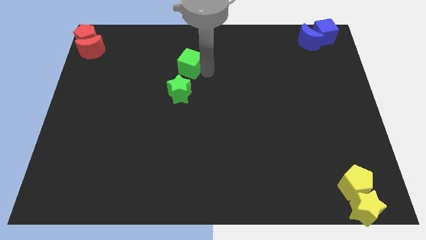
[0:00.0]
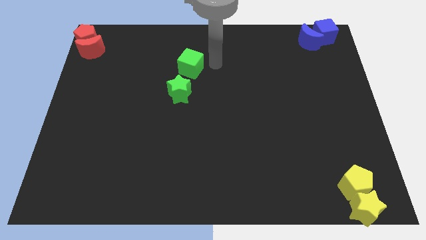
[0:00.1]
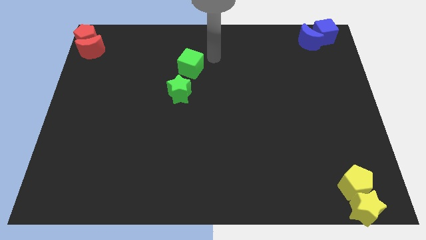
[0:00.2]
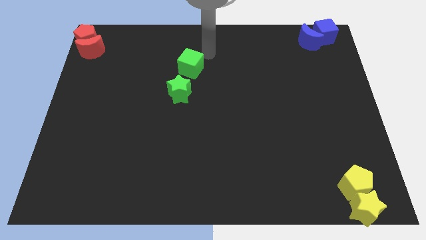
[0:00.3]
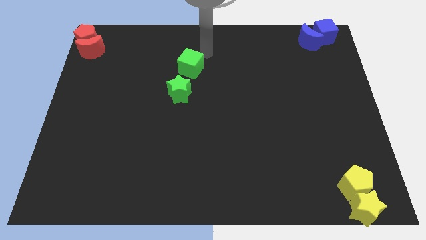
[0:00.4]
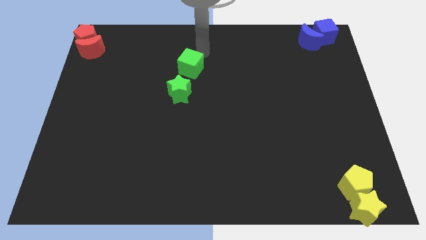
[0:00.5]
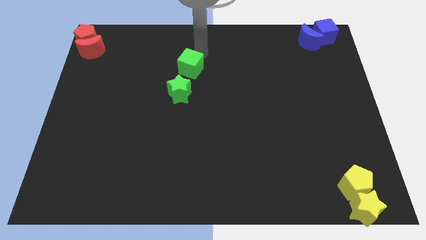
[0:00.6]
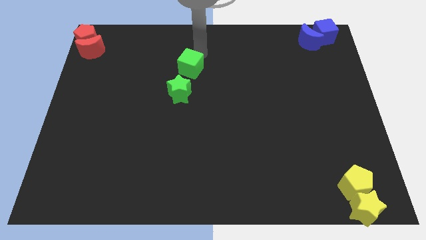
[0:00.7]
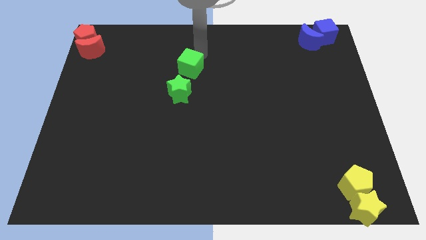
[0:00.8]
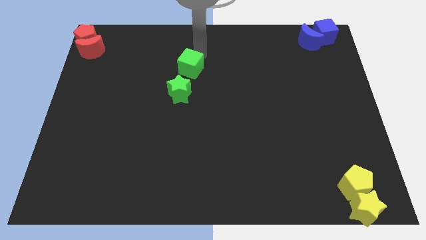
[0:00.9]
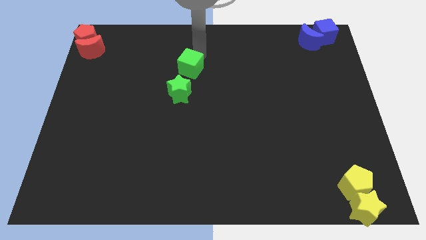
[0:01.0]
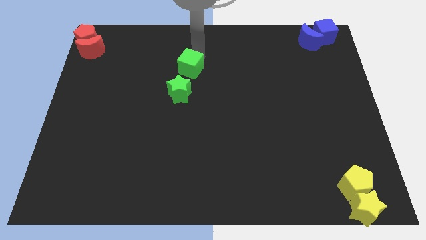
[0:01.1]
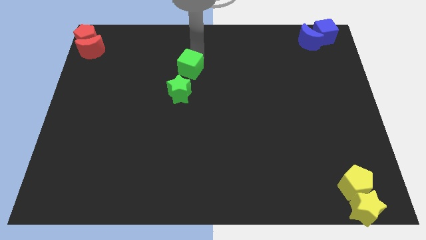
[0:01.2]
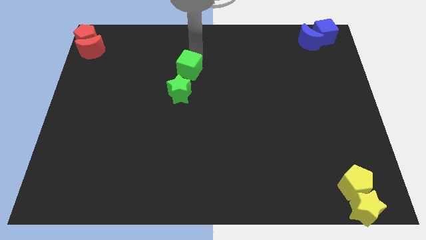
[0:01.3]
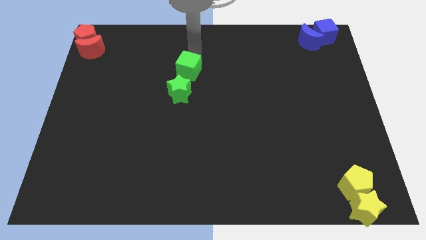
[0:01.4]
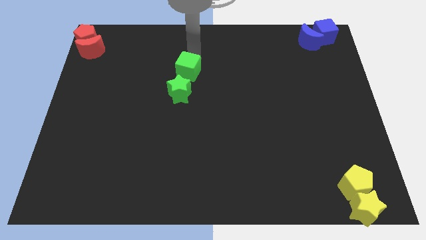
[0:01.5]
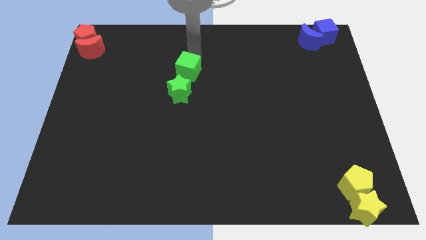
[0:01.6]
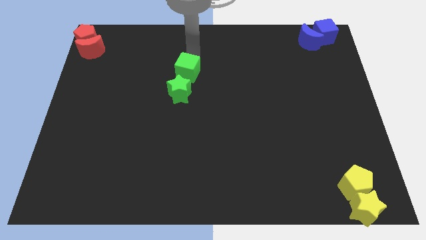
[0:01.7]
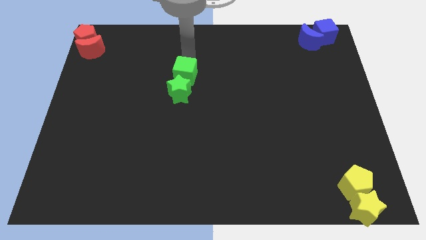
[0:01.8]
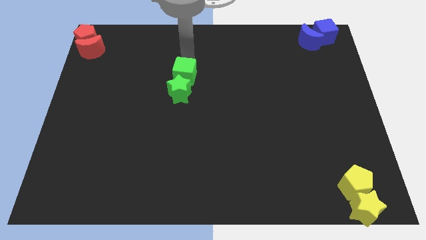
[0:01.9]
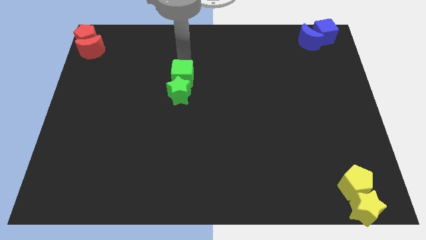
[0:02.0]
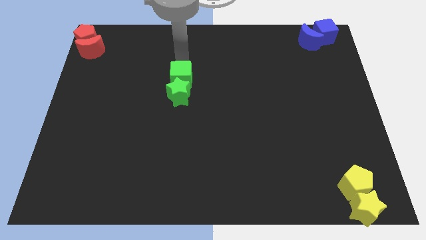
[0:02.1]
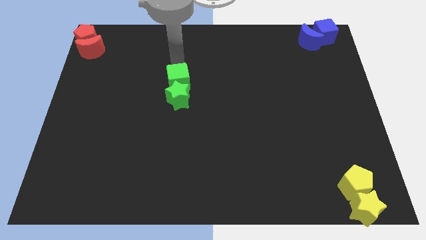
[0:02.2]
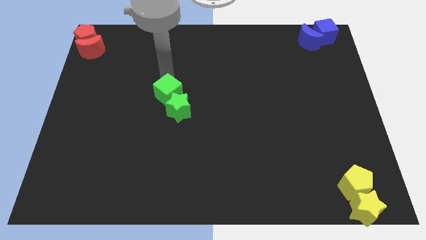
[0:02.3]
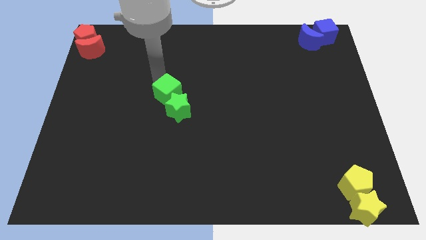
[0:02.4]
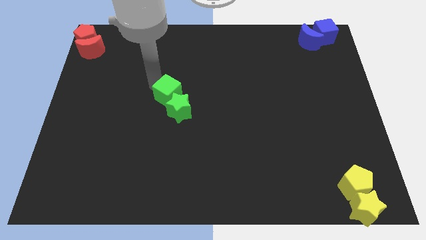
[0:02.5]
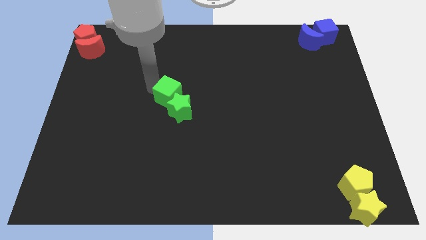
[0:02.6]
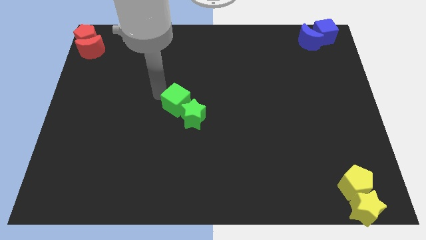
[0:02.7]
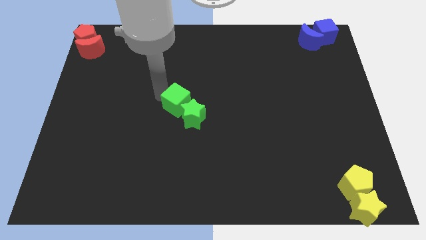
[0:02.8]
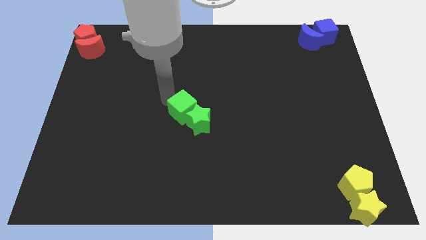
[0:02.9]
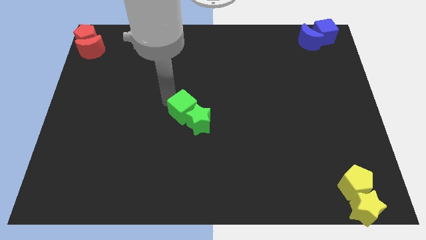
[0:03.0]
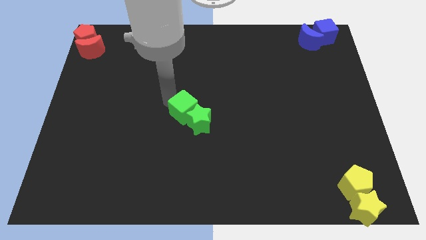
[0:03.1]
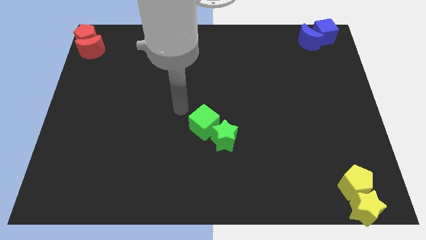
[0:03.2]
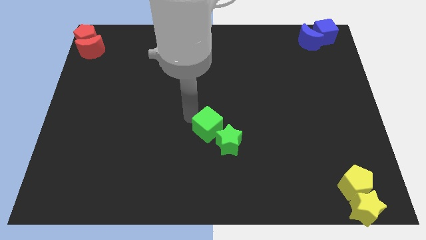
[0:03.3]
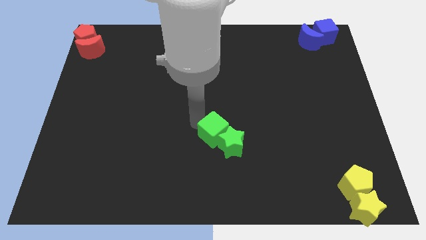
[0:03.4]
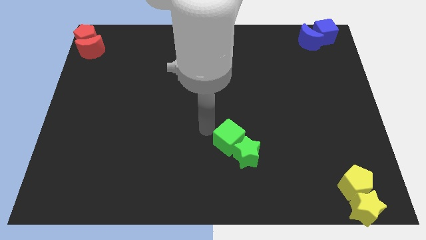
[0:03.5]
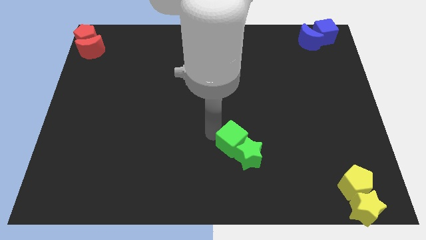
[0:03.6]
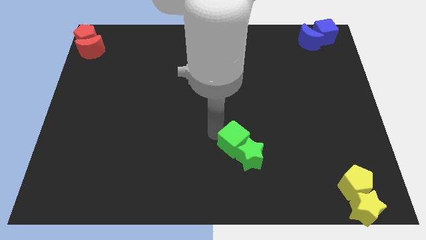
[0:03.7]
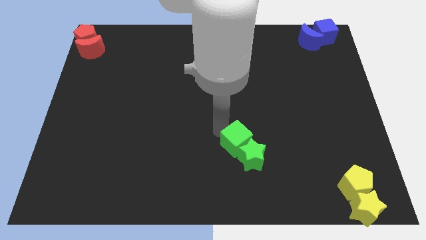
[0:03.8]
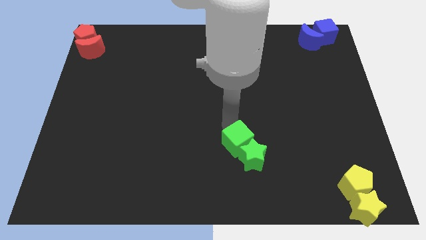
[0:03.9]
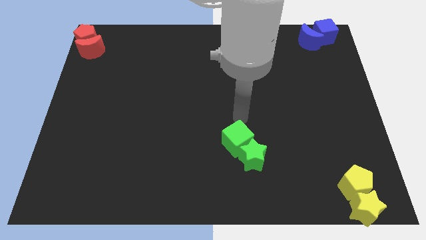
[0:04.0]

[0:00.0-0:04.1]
push the green cube and green star downward of the board

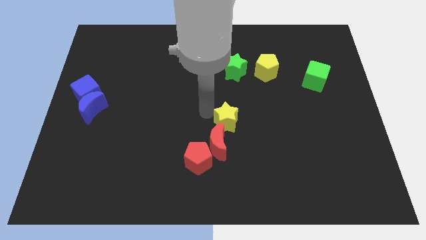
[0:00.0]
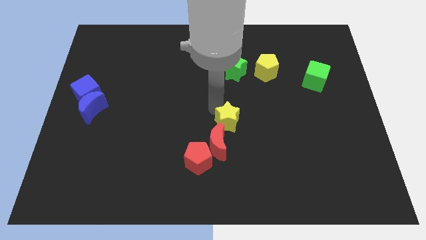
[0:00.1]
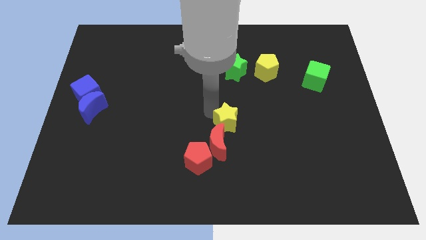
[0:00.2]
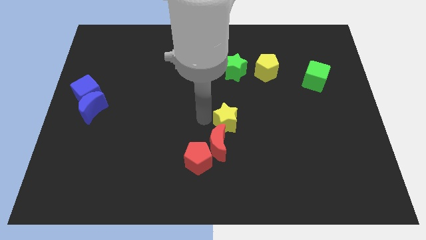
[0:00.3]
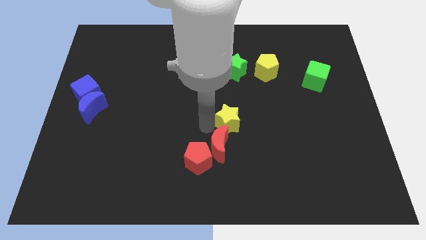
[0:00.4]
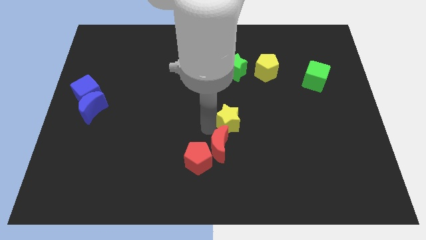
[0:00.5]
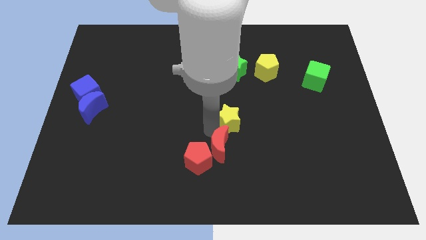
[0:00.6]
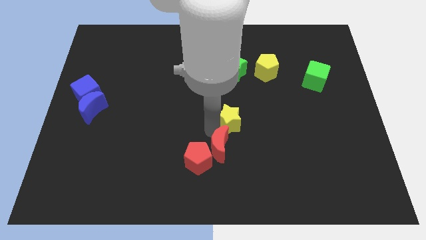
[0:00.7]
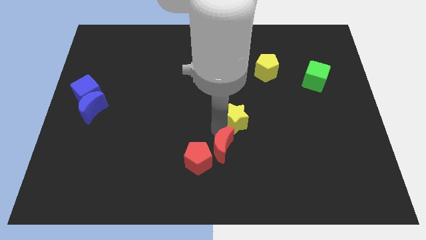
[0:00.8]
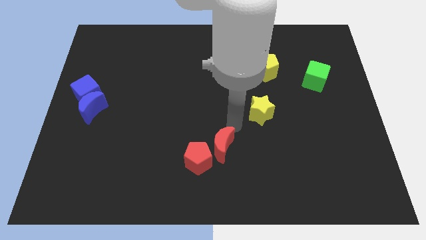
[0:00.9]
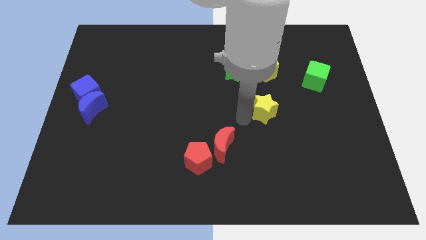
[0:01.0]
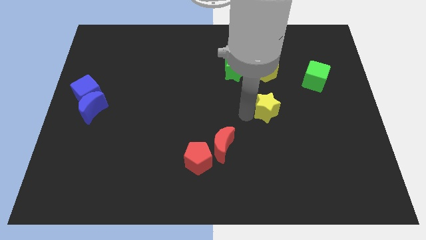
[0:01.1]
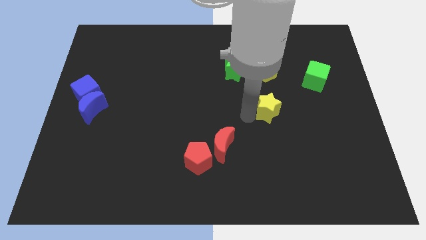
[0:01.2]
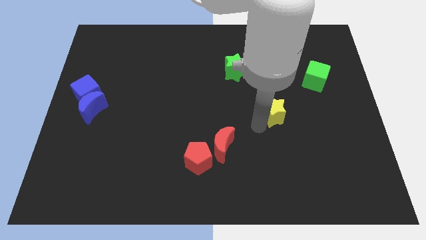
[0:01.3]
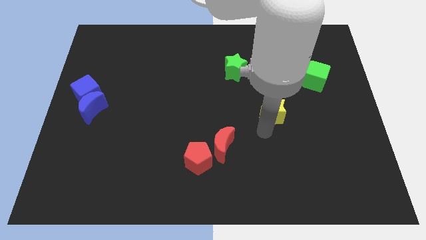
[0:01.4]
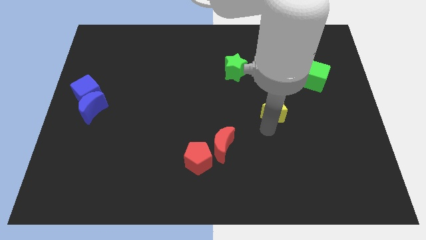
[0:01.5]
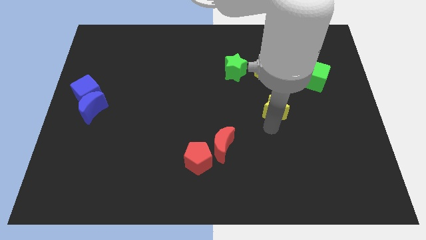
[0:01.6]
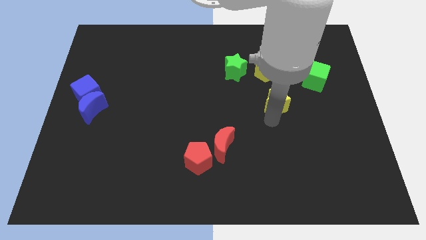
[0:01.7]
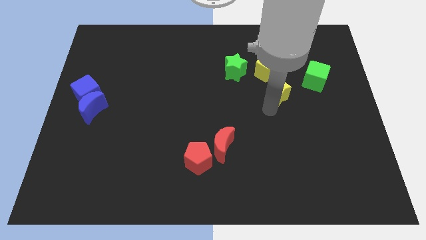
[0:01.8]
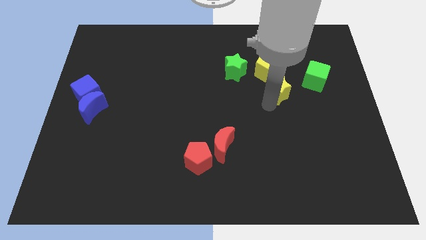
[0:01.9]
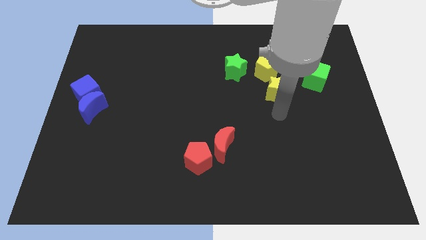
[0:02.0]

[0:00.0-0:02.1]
place the yellow star diagonal to green cube

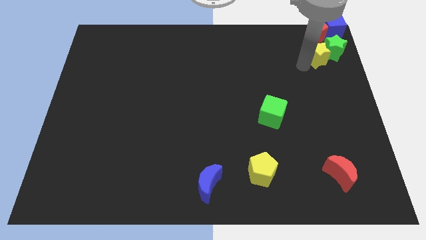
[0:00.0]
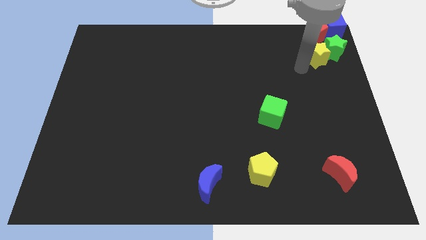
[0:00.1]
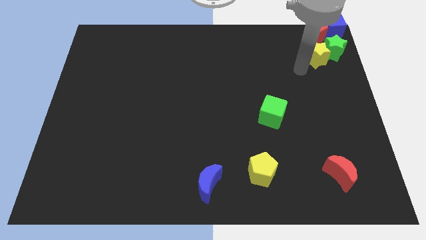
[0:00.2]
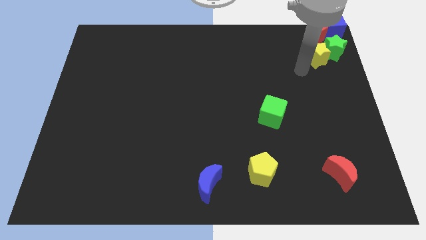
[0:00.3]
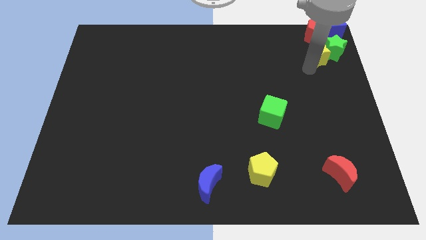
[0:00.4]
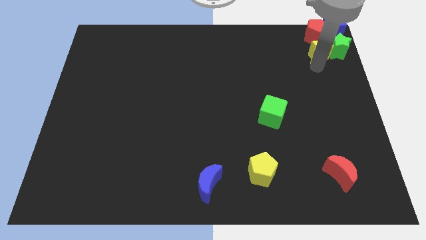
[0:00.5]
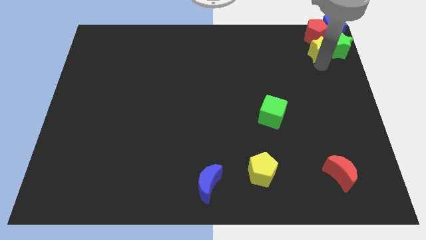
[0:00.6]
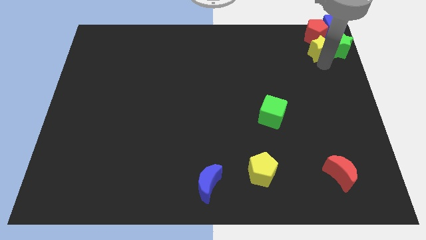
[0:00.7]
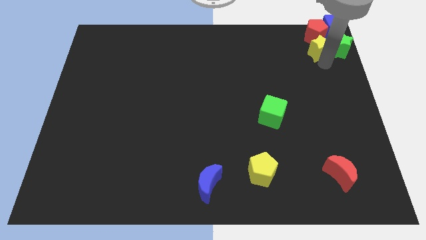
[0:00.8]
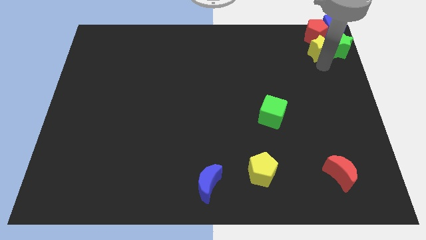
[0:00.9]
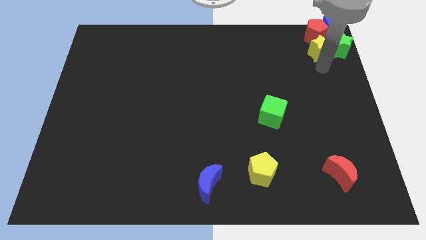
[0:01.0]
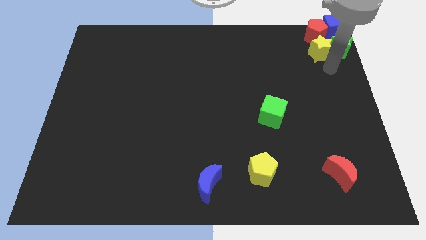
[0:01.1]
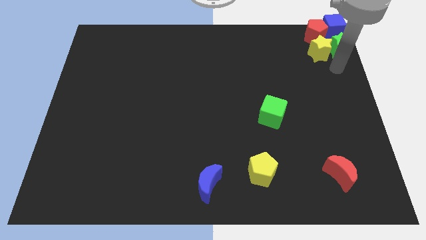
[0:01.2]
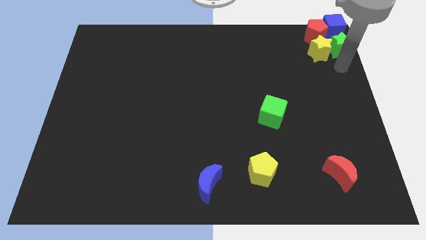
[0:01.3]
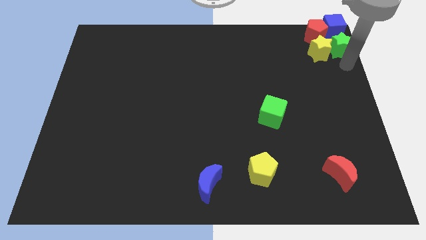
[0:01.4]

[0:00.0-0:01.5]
place yellow star to the right of green star

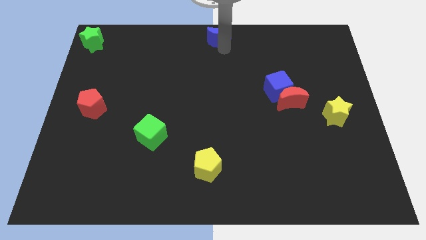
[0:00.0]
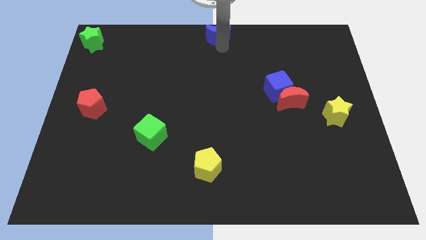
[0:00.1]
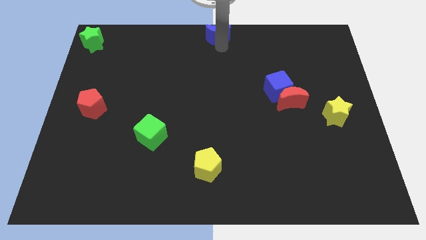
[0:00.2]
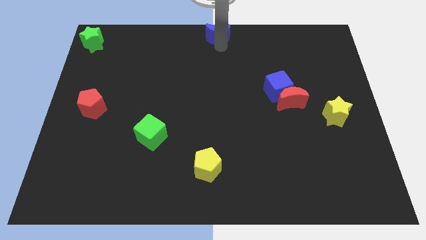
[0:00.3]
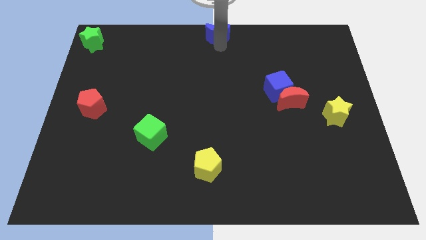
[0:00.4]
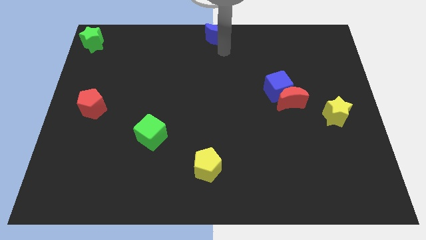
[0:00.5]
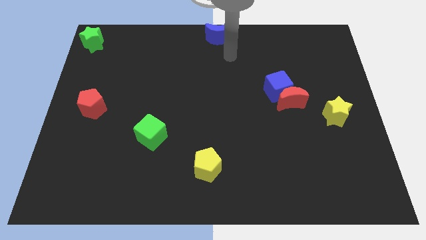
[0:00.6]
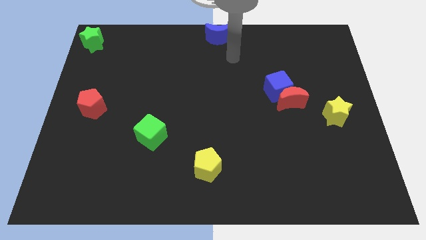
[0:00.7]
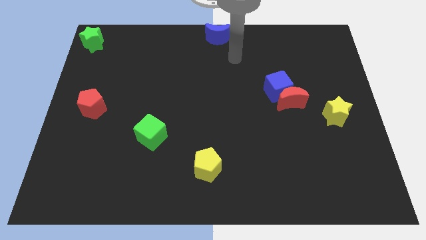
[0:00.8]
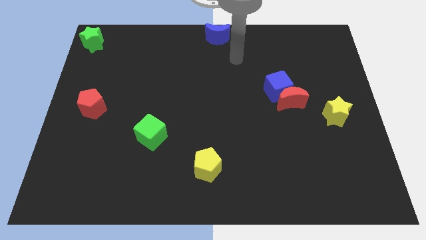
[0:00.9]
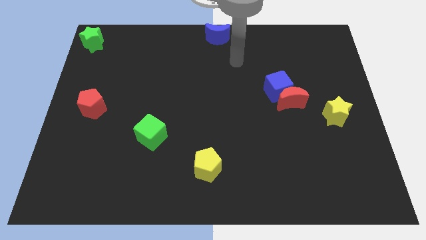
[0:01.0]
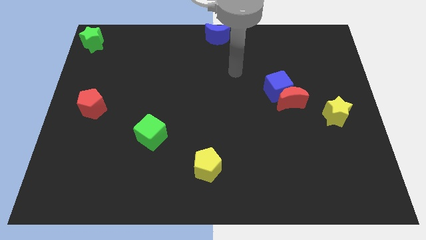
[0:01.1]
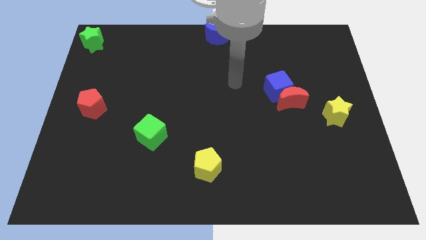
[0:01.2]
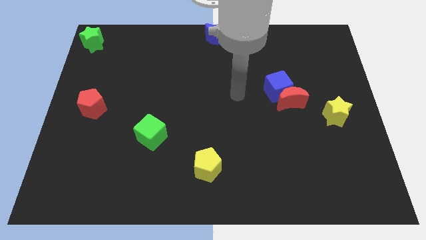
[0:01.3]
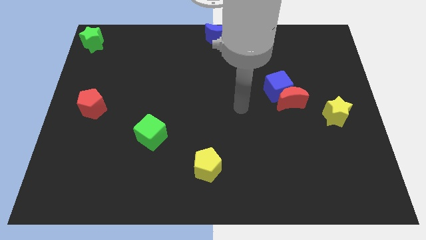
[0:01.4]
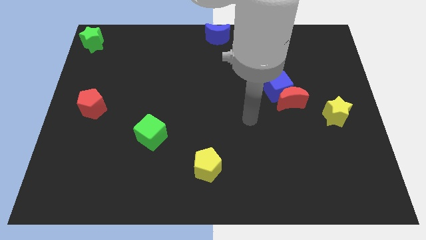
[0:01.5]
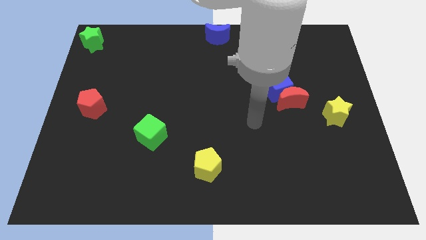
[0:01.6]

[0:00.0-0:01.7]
move the arm away from the blue moon
